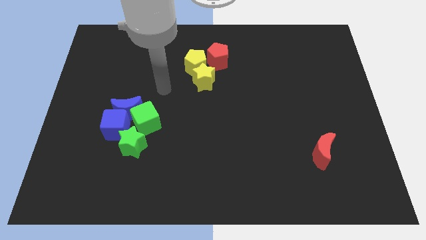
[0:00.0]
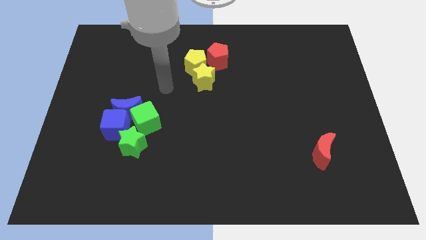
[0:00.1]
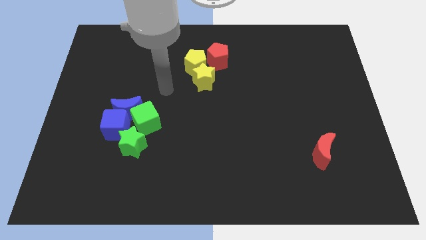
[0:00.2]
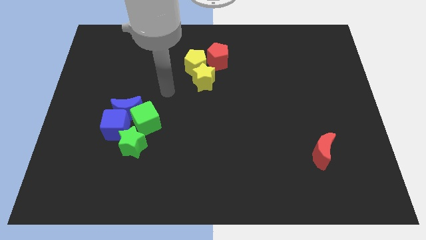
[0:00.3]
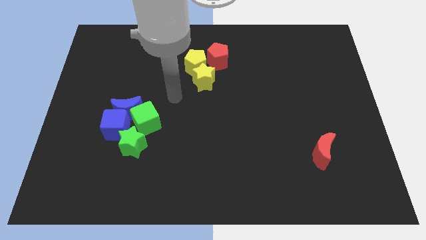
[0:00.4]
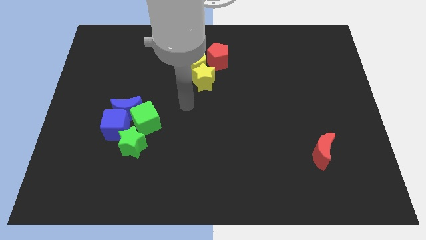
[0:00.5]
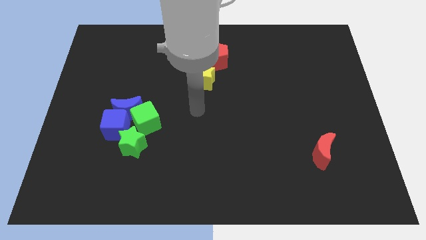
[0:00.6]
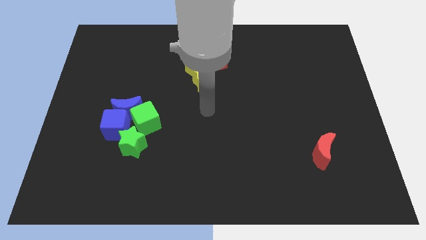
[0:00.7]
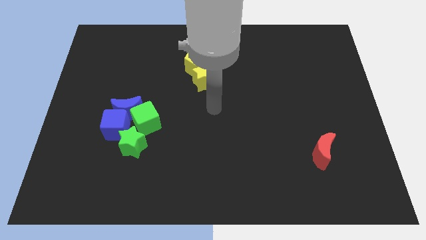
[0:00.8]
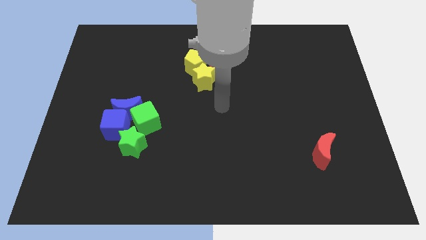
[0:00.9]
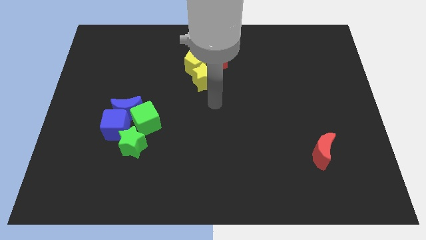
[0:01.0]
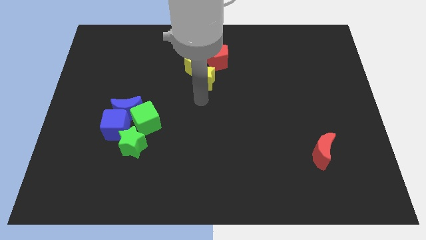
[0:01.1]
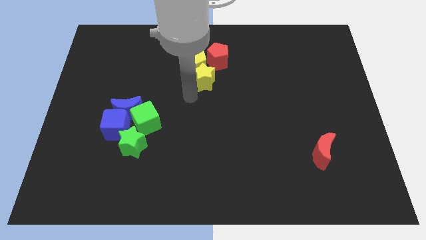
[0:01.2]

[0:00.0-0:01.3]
point your arm at the bottom of the yellow star

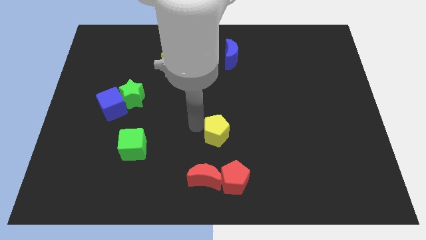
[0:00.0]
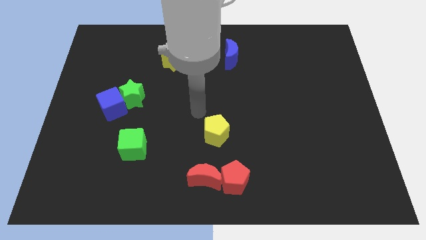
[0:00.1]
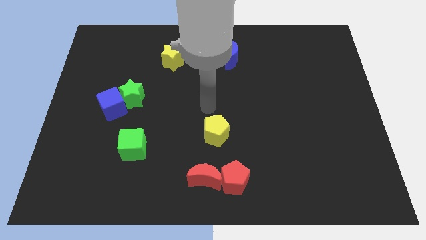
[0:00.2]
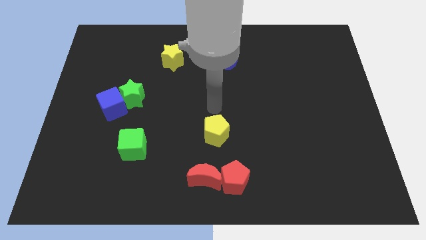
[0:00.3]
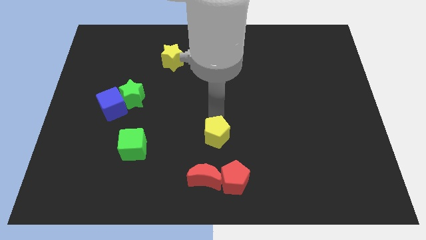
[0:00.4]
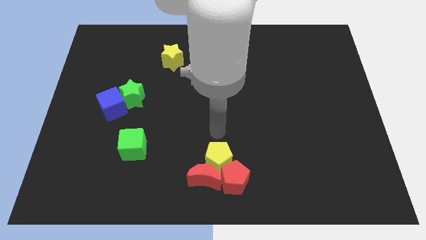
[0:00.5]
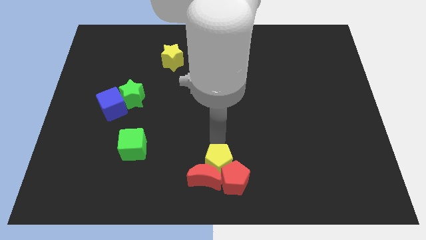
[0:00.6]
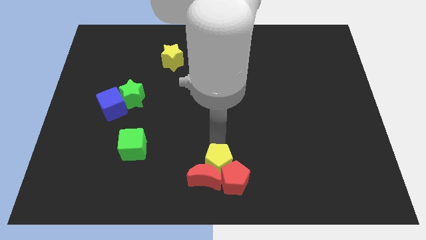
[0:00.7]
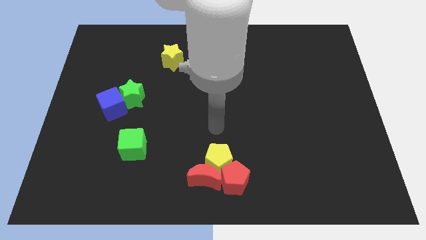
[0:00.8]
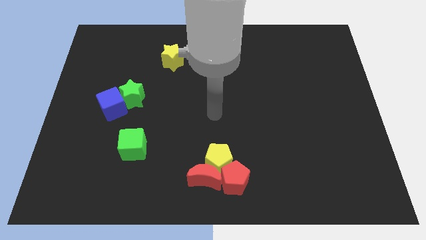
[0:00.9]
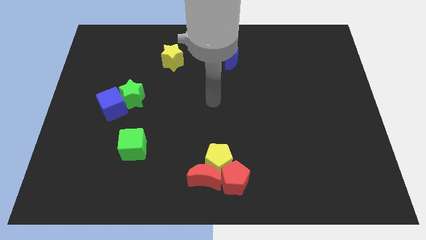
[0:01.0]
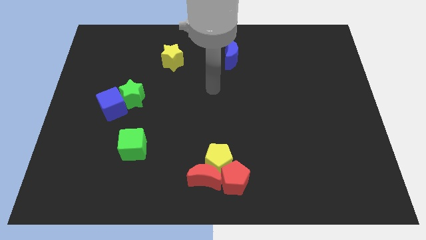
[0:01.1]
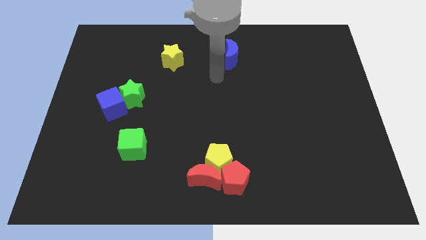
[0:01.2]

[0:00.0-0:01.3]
push the yellow pentagon into red crescent

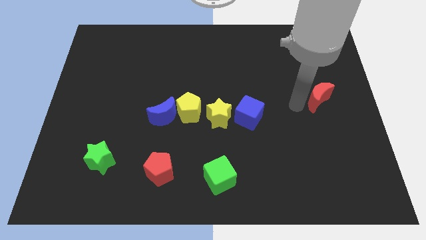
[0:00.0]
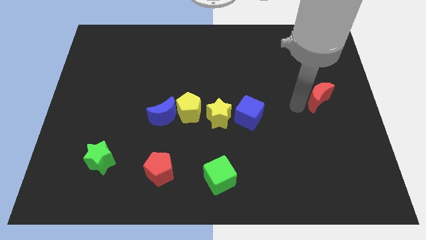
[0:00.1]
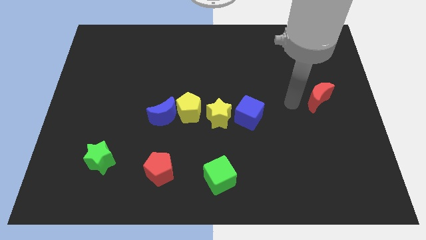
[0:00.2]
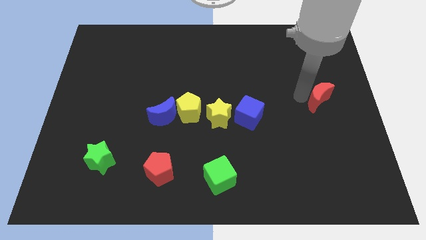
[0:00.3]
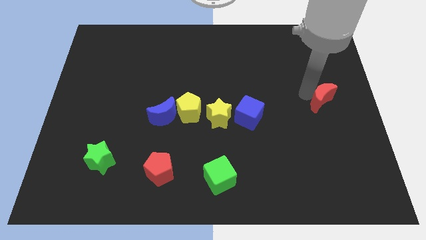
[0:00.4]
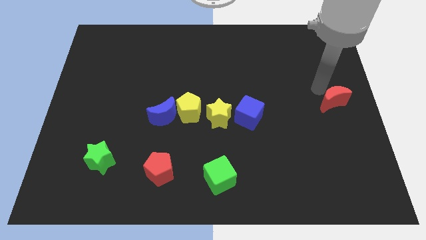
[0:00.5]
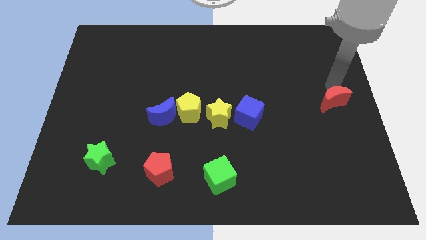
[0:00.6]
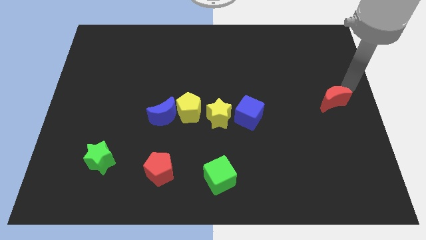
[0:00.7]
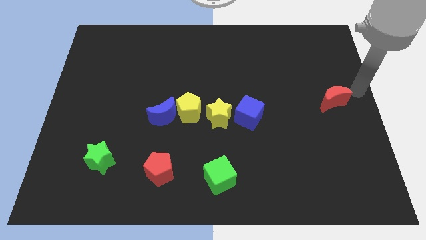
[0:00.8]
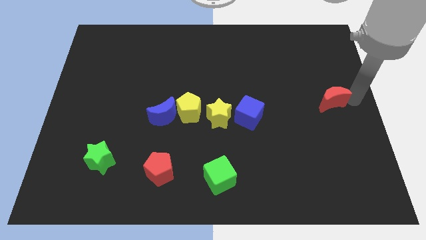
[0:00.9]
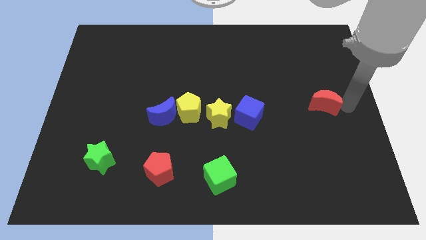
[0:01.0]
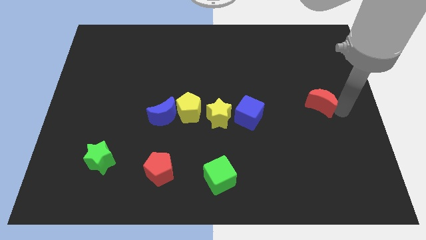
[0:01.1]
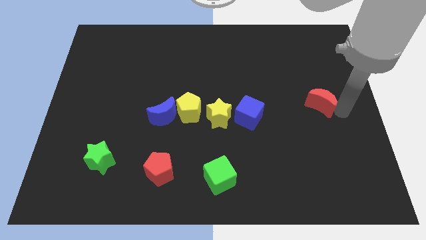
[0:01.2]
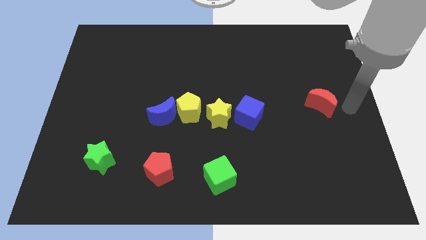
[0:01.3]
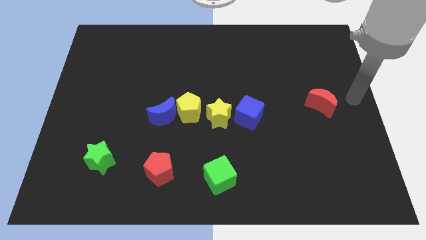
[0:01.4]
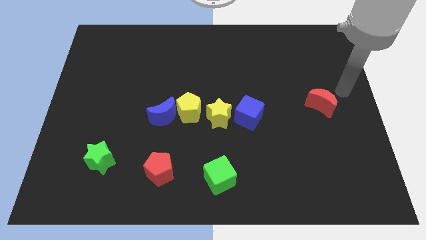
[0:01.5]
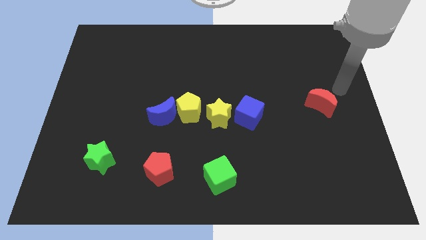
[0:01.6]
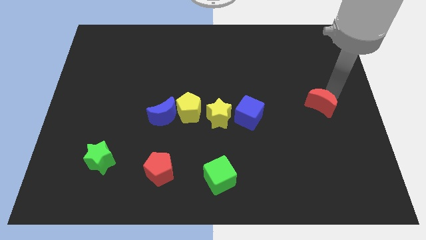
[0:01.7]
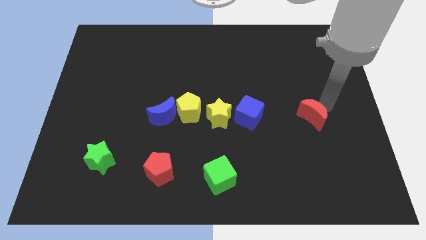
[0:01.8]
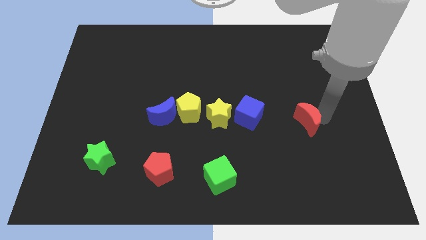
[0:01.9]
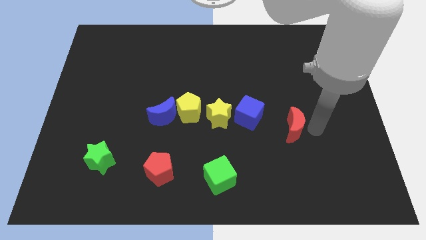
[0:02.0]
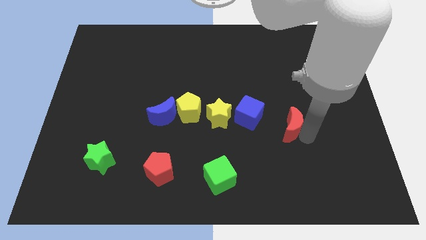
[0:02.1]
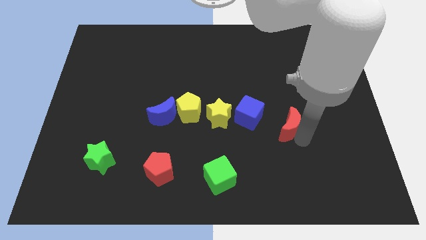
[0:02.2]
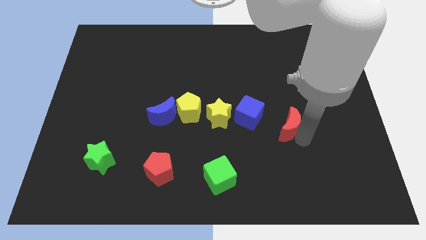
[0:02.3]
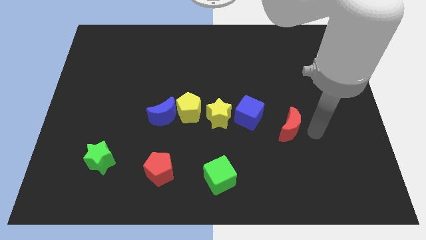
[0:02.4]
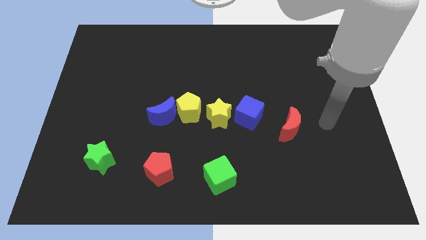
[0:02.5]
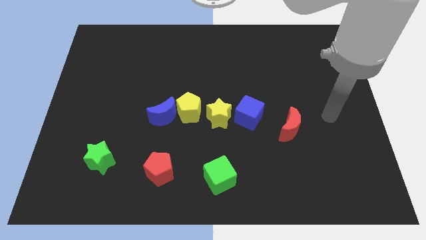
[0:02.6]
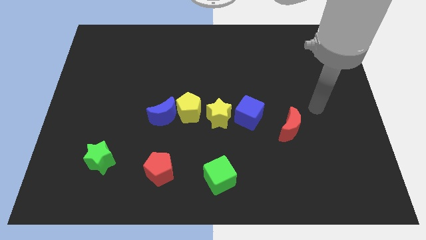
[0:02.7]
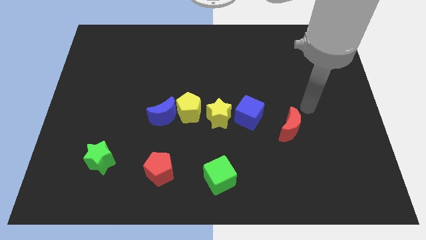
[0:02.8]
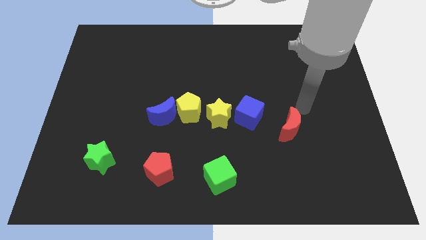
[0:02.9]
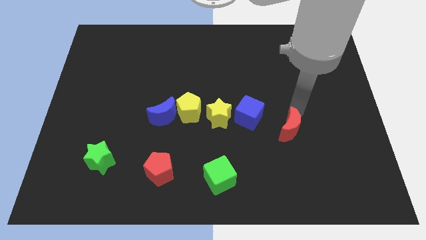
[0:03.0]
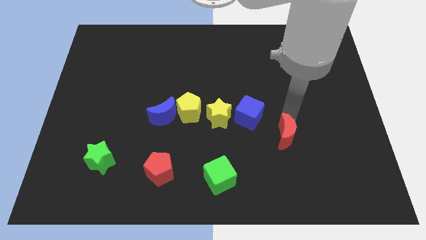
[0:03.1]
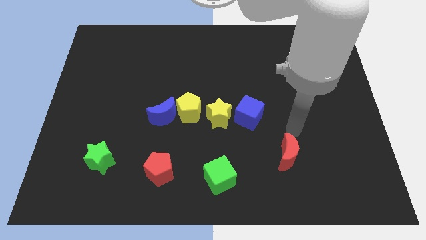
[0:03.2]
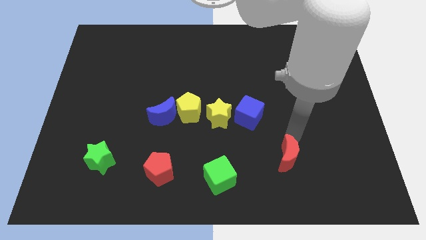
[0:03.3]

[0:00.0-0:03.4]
place the red moon diagonally bottom right to the blue cube

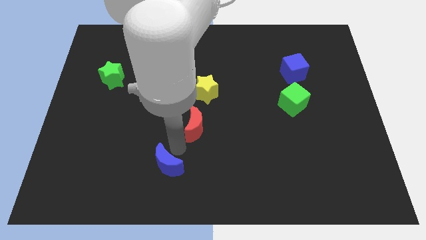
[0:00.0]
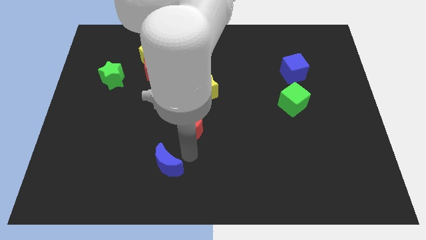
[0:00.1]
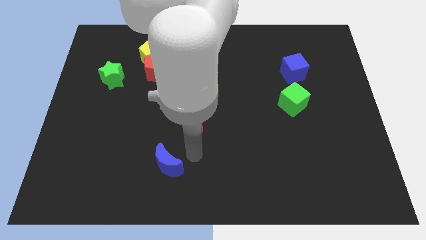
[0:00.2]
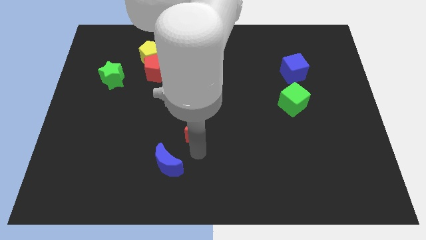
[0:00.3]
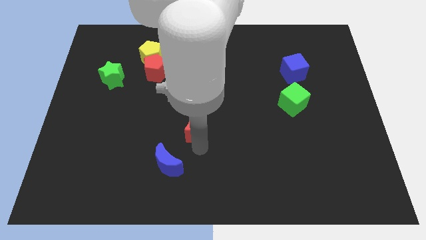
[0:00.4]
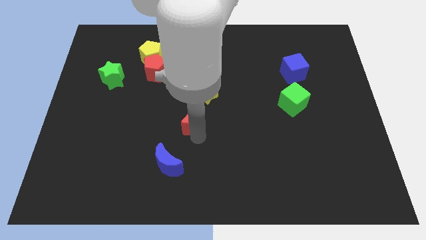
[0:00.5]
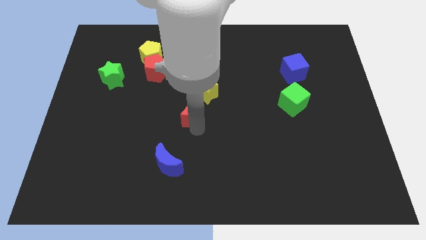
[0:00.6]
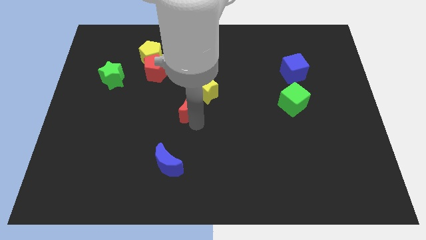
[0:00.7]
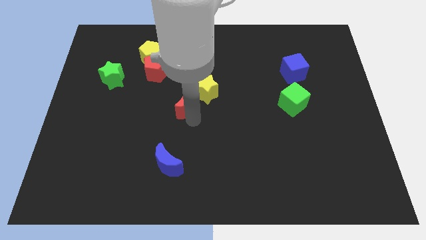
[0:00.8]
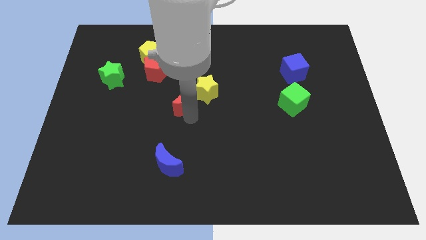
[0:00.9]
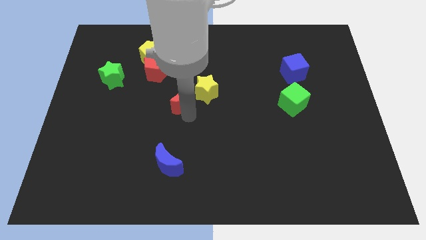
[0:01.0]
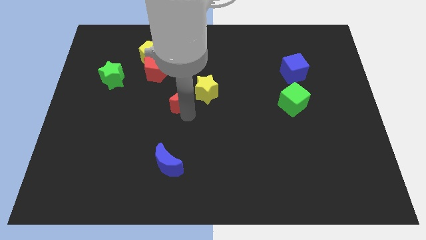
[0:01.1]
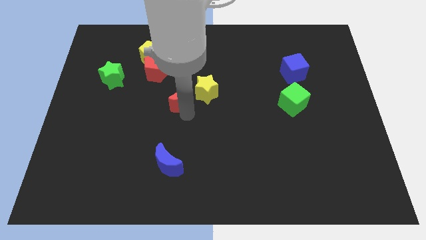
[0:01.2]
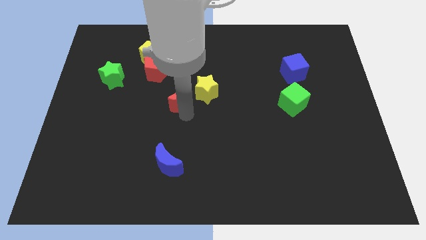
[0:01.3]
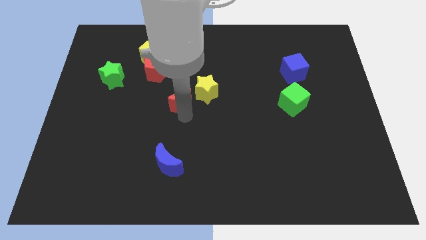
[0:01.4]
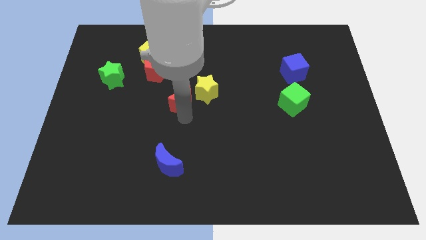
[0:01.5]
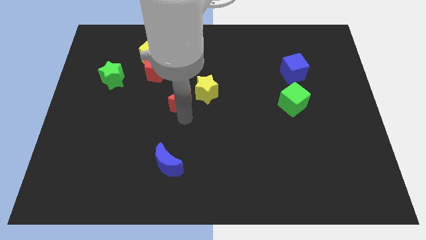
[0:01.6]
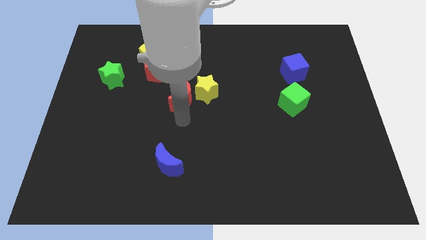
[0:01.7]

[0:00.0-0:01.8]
place the red moon diagonally to the red pentagon

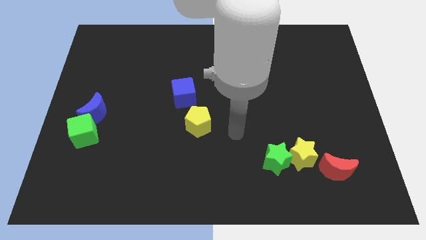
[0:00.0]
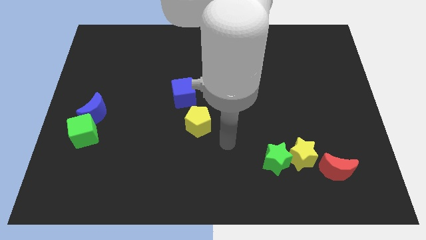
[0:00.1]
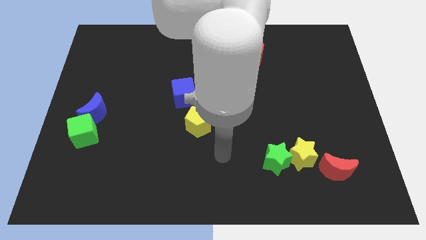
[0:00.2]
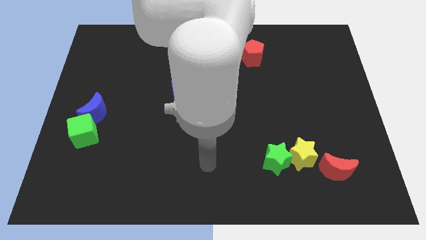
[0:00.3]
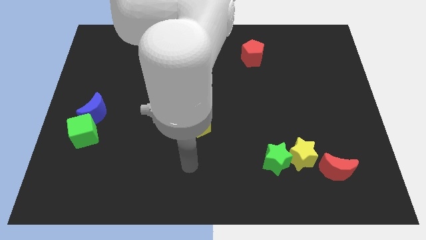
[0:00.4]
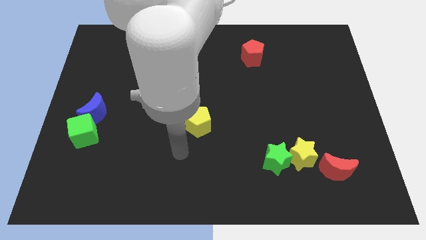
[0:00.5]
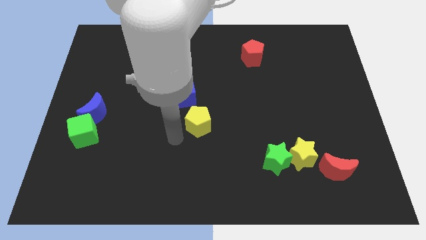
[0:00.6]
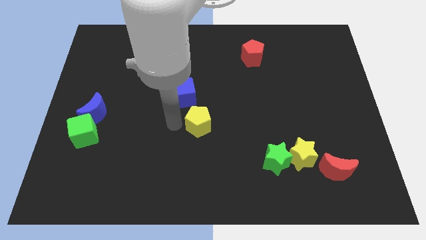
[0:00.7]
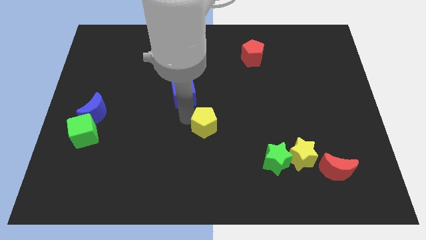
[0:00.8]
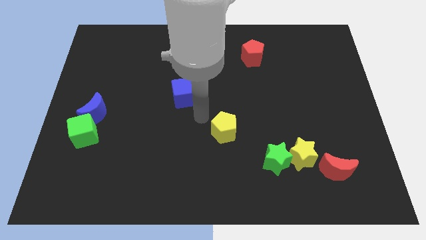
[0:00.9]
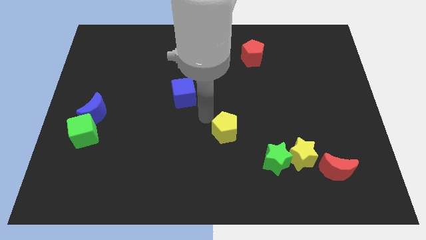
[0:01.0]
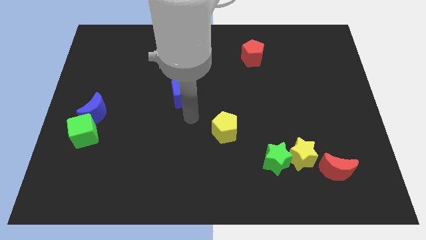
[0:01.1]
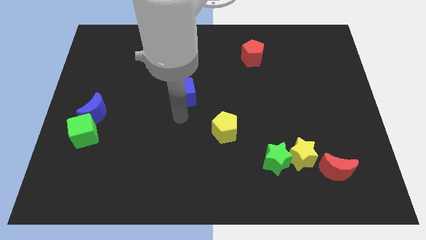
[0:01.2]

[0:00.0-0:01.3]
separate yellow pentagon from the blue cube
